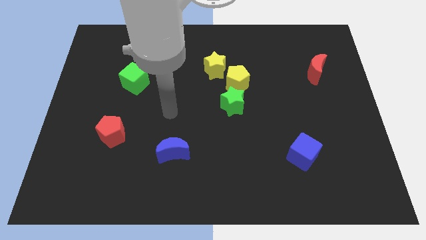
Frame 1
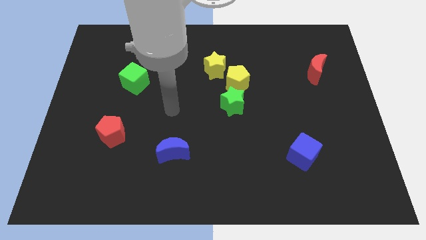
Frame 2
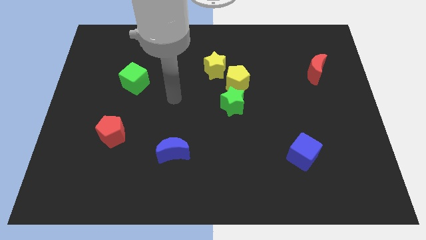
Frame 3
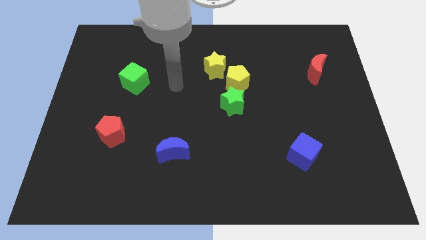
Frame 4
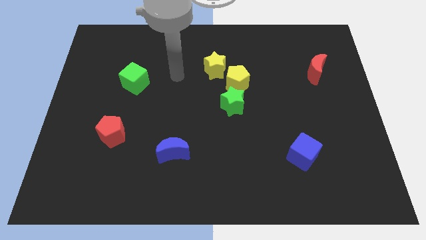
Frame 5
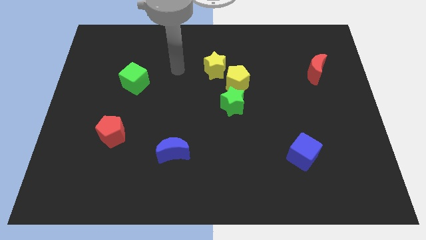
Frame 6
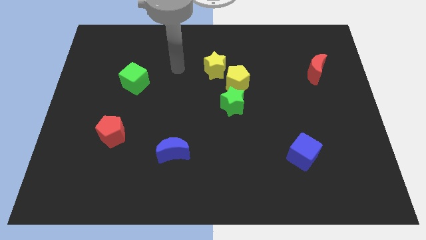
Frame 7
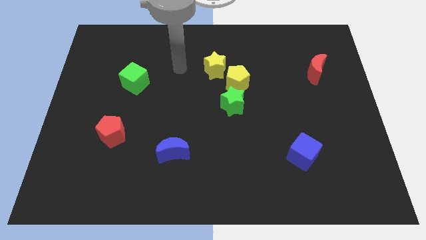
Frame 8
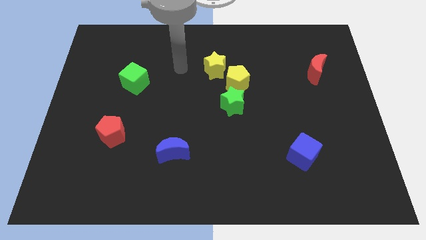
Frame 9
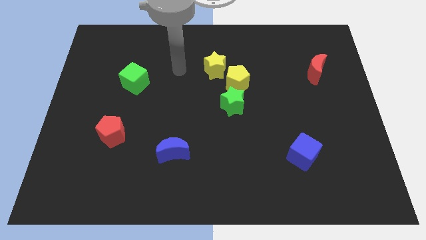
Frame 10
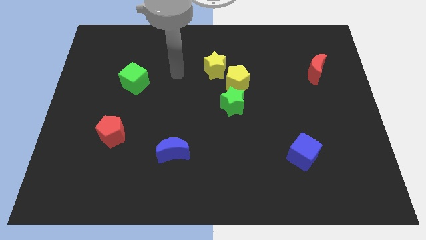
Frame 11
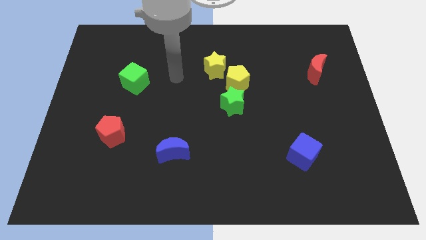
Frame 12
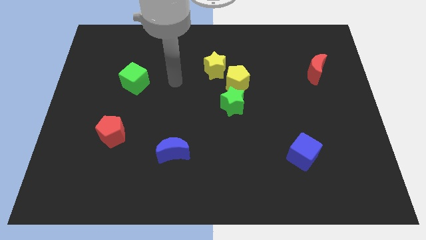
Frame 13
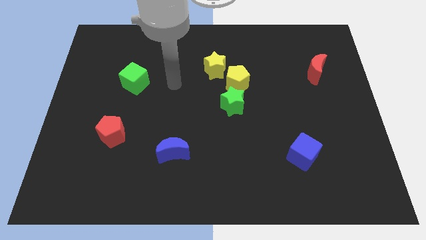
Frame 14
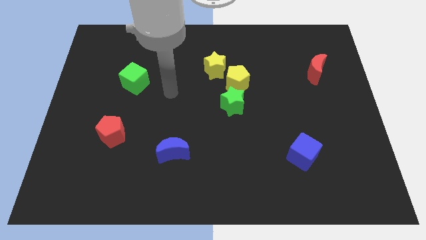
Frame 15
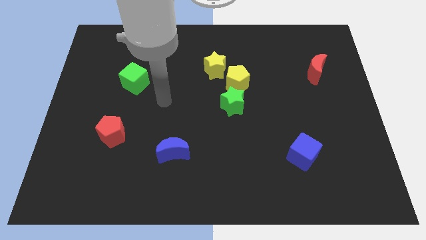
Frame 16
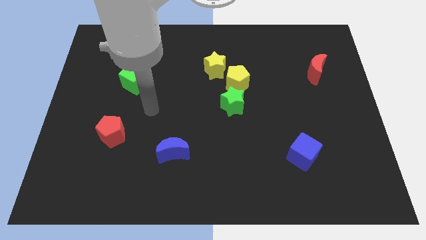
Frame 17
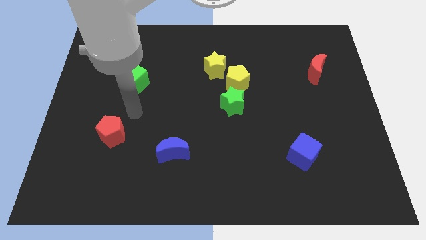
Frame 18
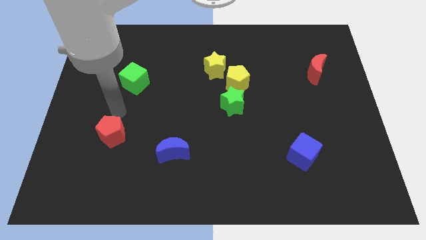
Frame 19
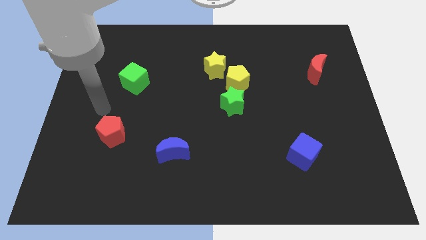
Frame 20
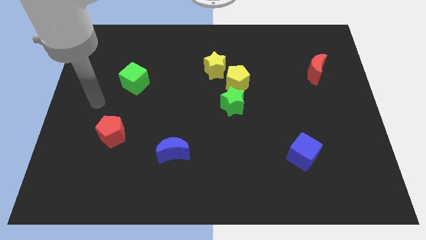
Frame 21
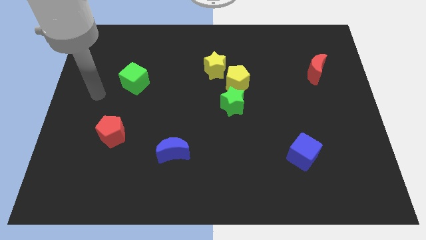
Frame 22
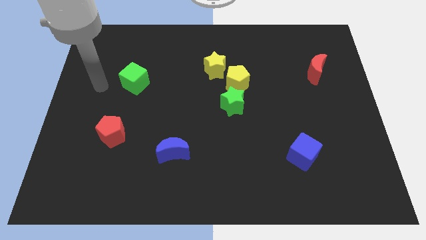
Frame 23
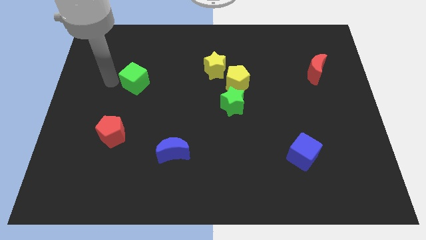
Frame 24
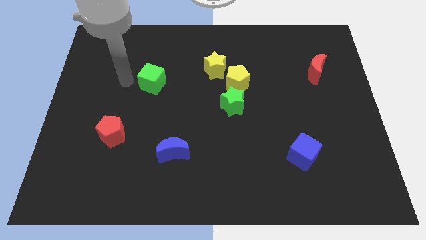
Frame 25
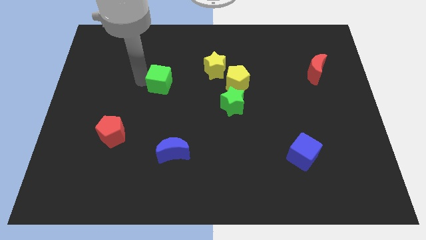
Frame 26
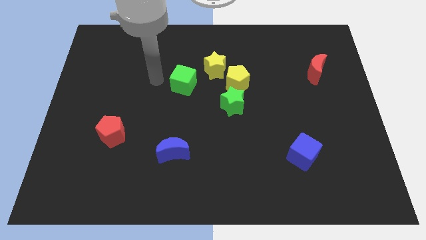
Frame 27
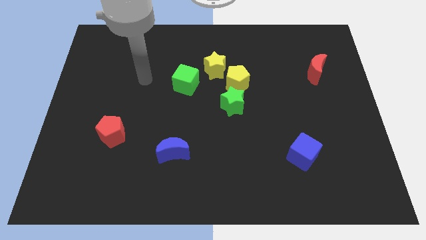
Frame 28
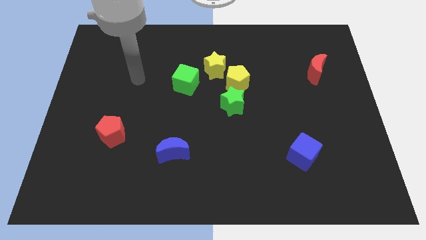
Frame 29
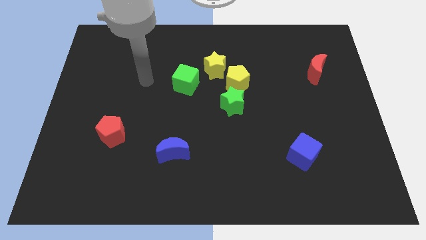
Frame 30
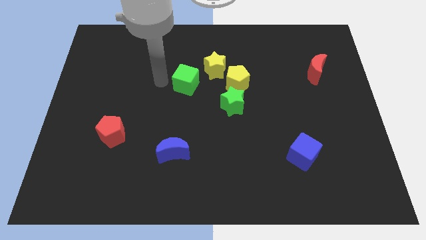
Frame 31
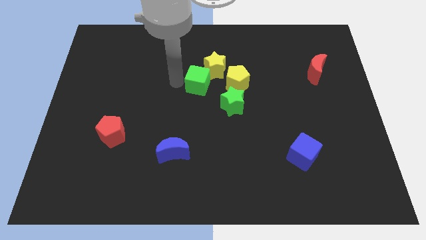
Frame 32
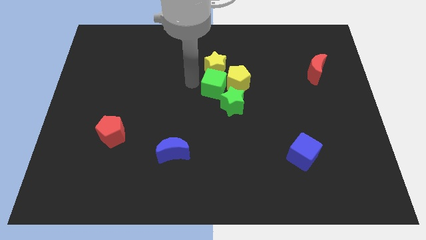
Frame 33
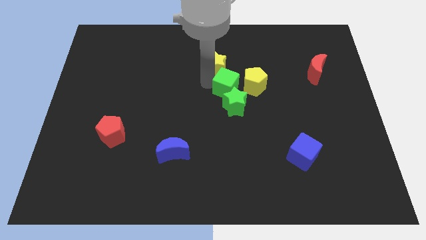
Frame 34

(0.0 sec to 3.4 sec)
add the green cube to the group of yellow and green blocks

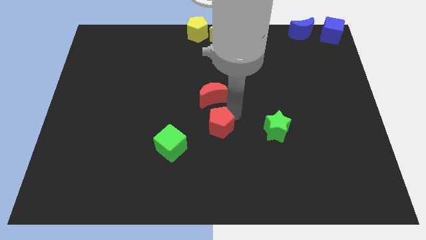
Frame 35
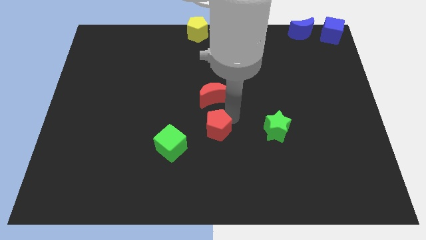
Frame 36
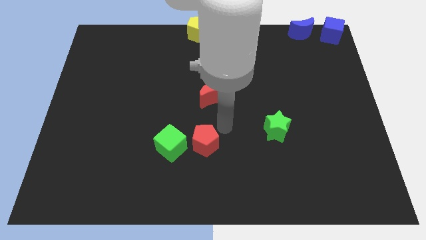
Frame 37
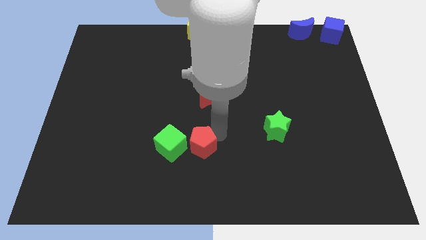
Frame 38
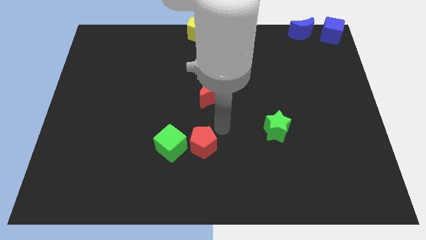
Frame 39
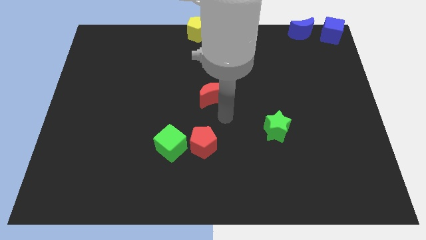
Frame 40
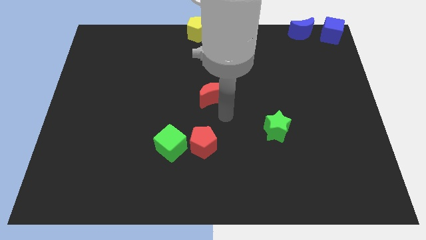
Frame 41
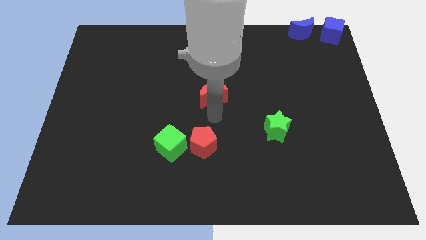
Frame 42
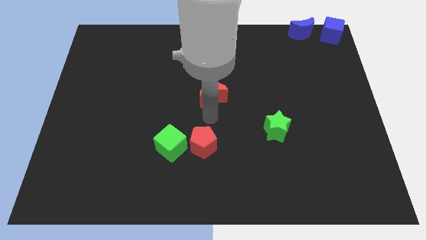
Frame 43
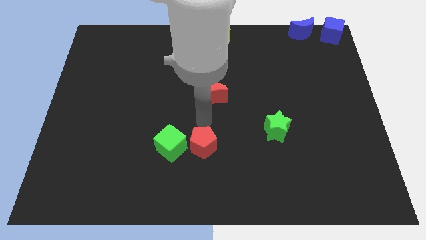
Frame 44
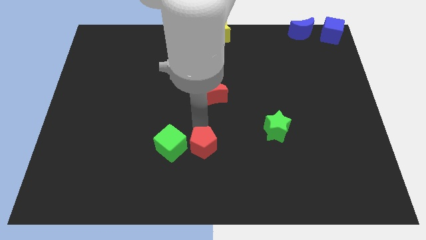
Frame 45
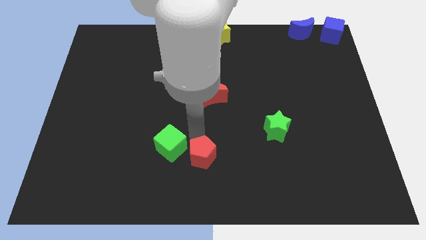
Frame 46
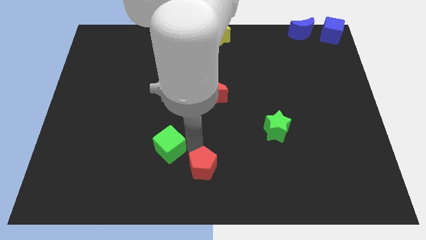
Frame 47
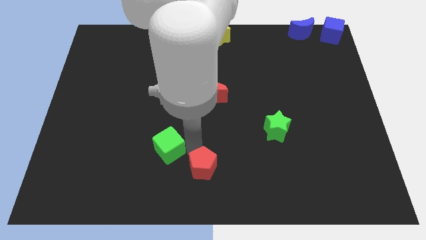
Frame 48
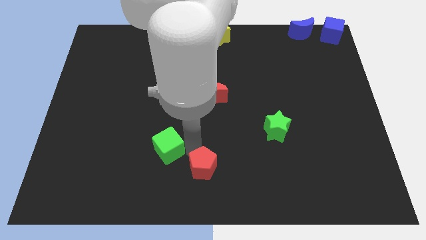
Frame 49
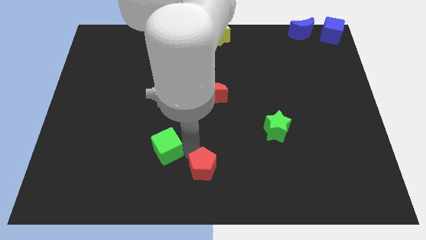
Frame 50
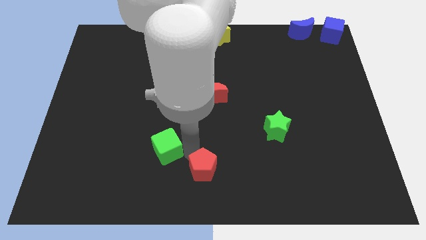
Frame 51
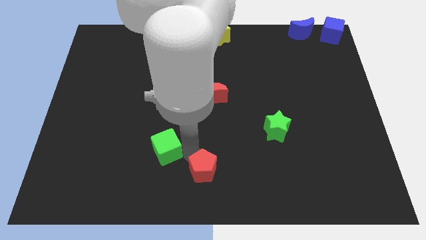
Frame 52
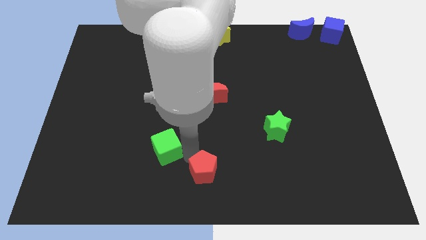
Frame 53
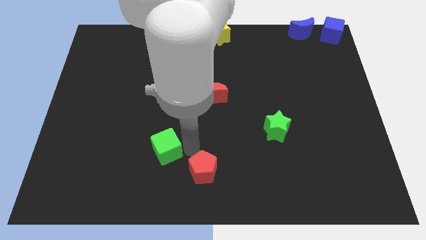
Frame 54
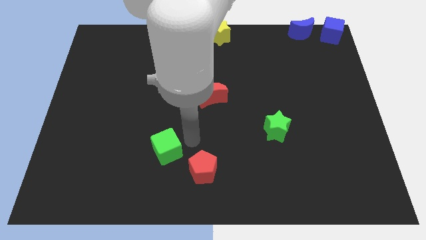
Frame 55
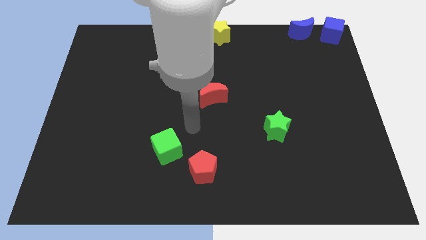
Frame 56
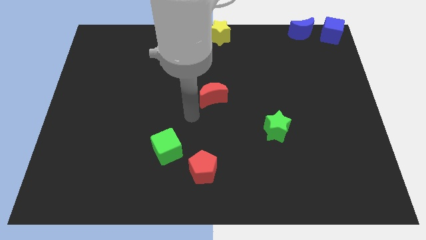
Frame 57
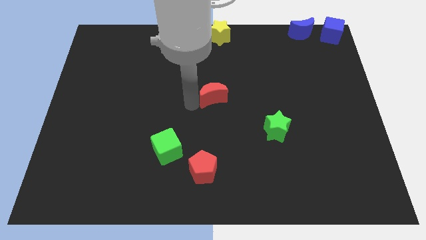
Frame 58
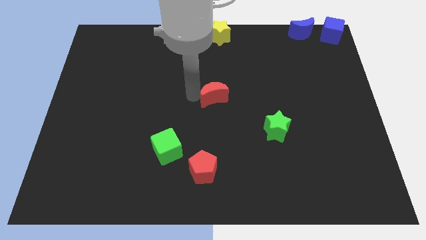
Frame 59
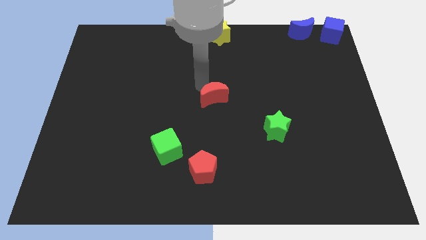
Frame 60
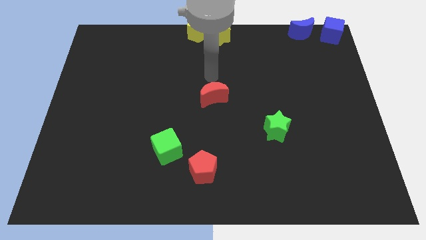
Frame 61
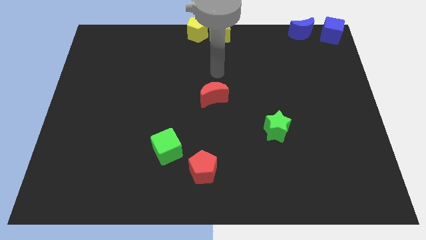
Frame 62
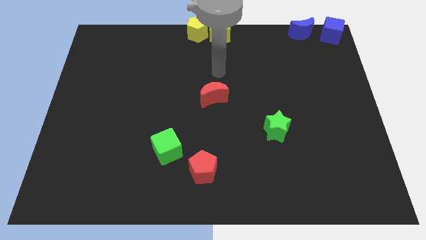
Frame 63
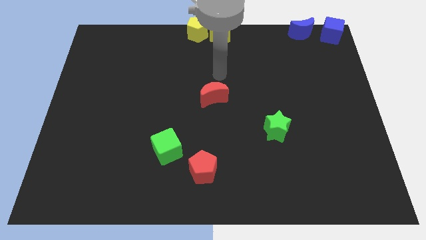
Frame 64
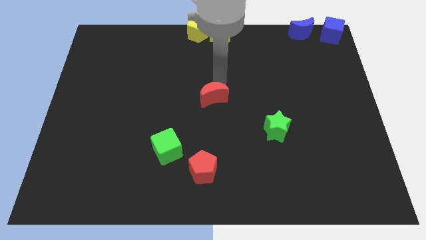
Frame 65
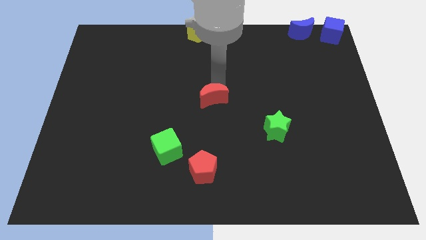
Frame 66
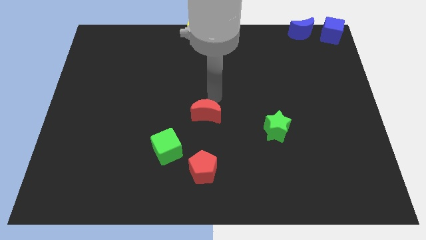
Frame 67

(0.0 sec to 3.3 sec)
push red pentagon towards the bottom left

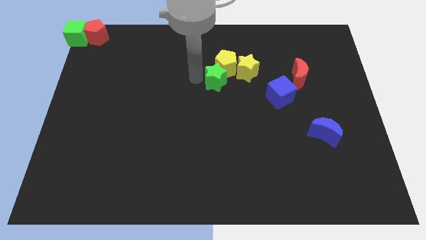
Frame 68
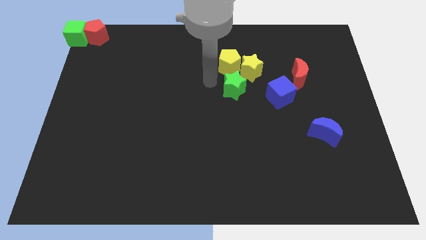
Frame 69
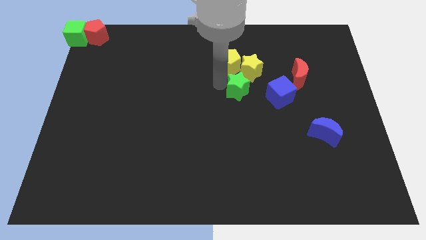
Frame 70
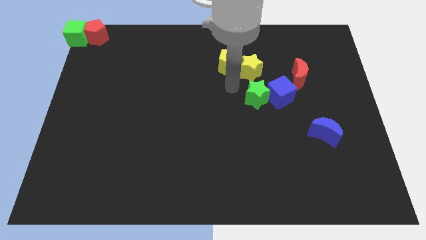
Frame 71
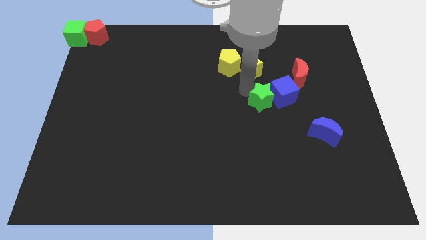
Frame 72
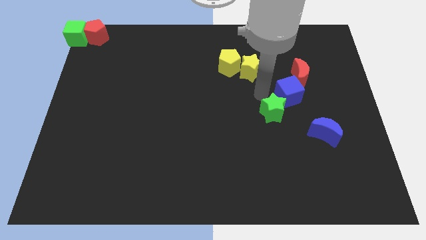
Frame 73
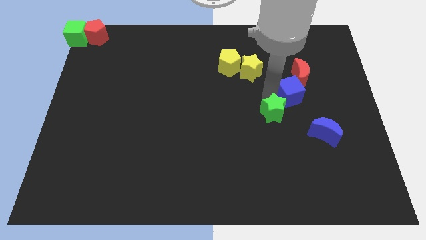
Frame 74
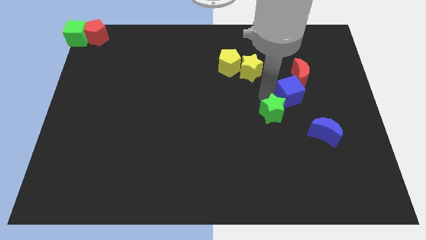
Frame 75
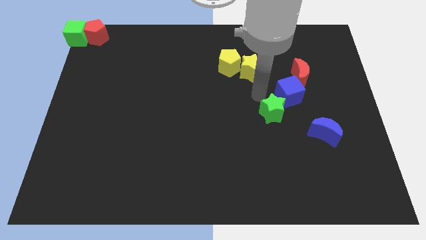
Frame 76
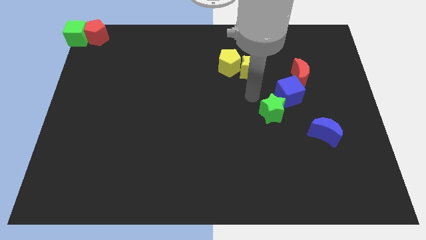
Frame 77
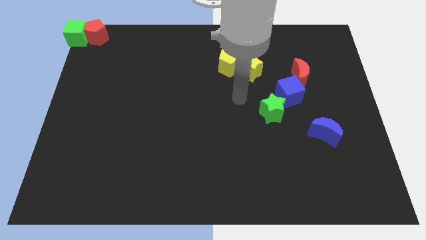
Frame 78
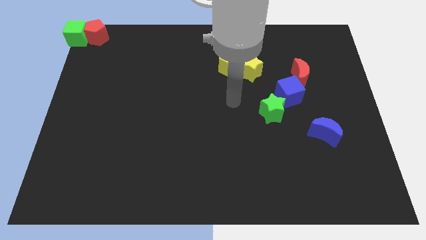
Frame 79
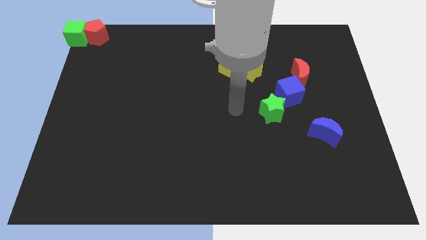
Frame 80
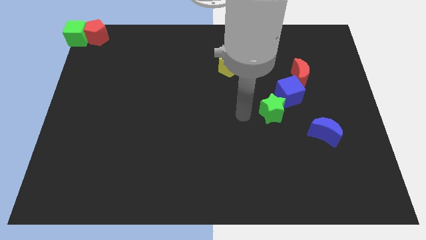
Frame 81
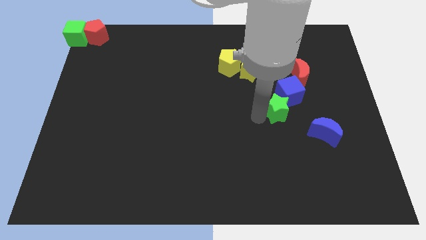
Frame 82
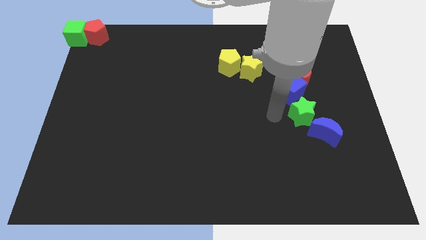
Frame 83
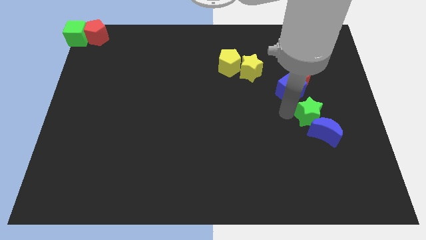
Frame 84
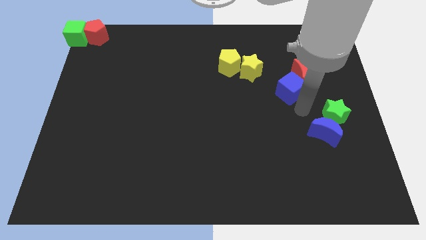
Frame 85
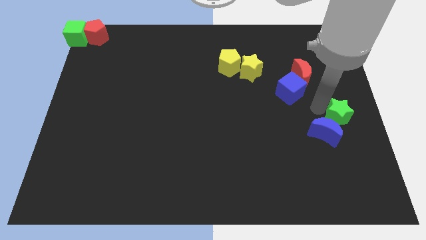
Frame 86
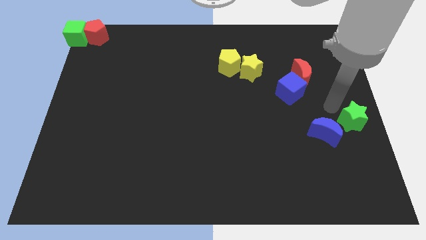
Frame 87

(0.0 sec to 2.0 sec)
move the green star to the top right of the blue moon

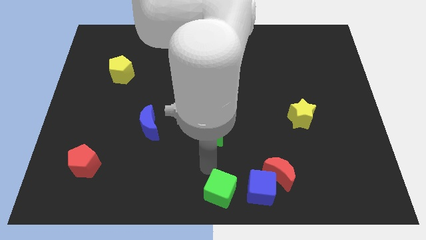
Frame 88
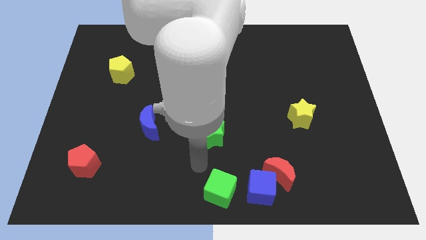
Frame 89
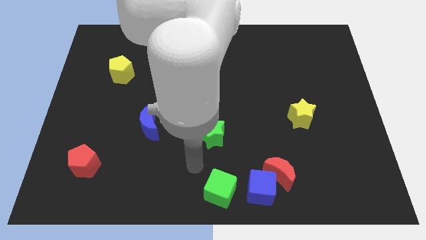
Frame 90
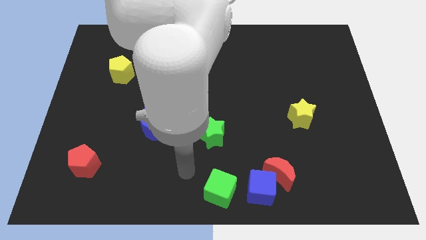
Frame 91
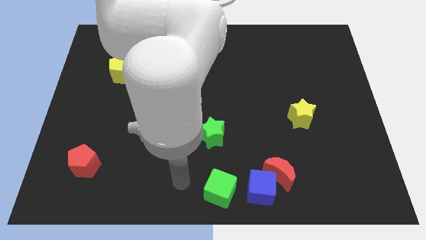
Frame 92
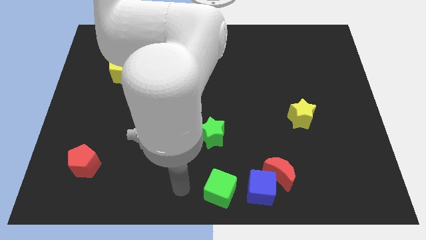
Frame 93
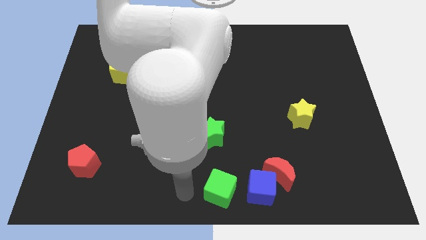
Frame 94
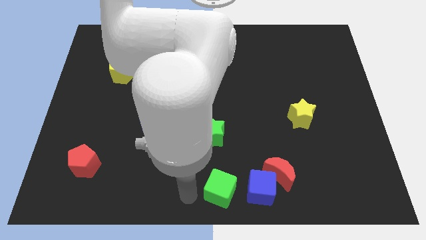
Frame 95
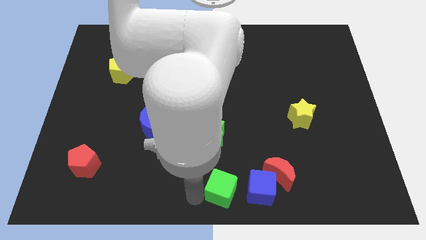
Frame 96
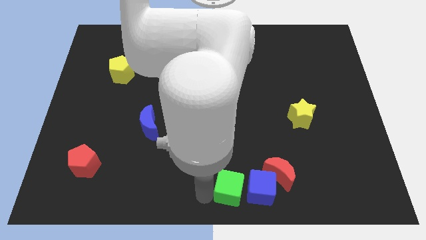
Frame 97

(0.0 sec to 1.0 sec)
point your arm at the left of the green cube
